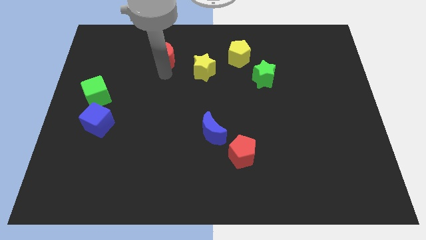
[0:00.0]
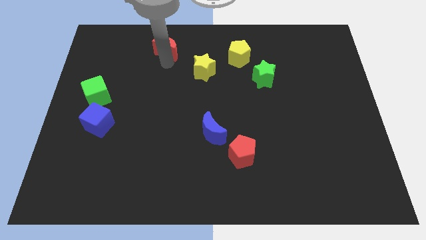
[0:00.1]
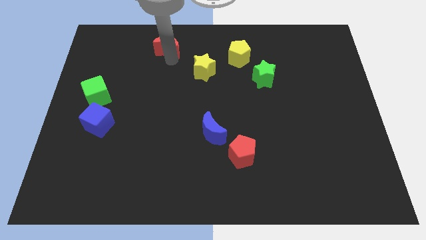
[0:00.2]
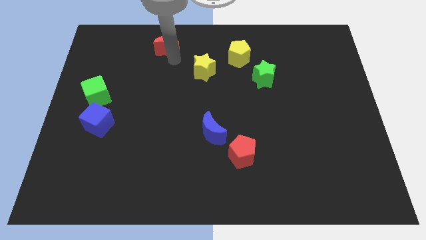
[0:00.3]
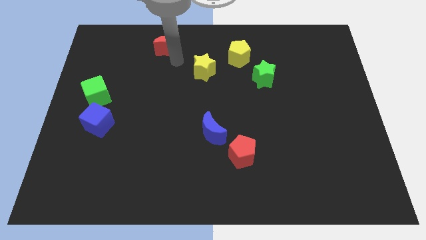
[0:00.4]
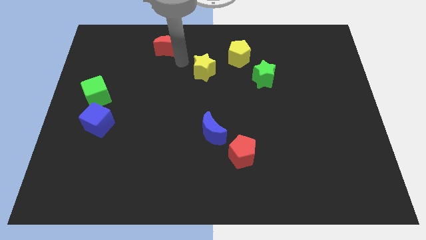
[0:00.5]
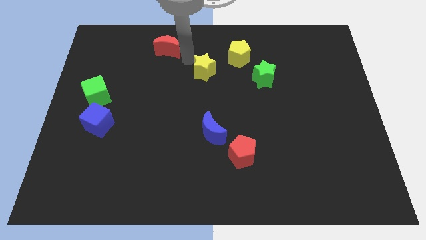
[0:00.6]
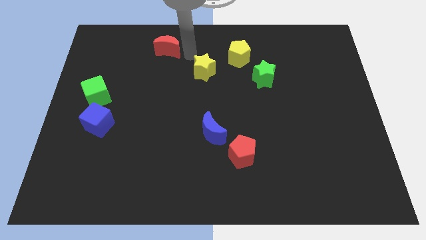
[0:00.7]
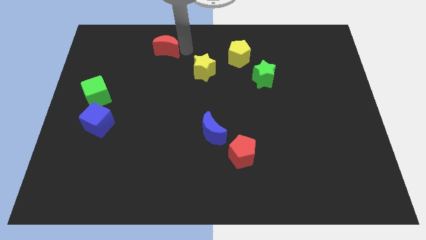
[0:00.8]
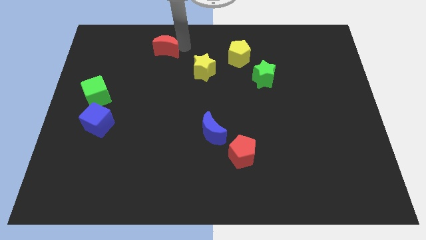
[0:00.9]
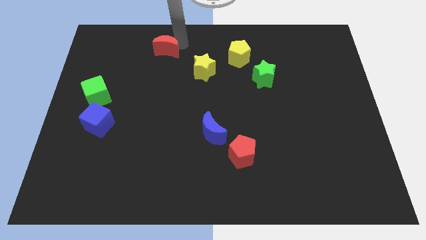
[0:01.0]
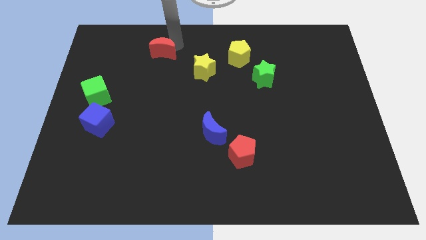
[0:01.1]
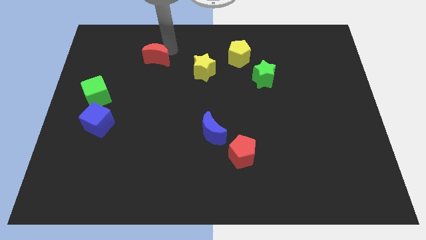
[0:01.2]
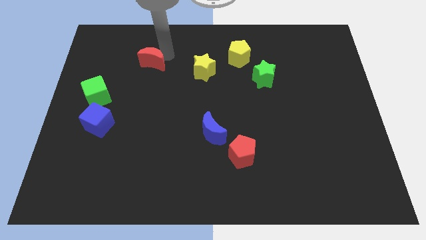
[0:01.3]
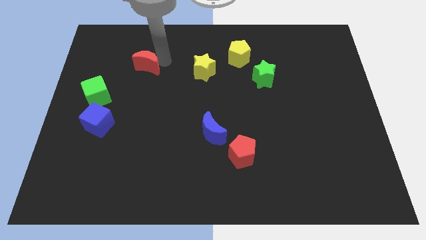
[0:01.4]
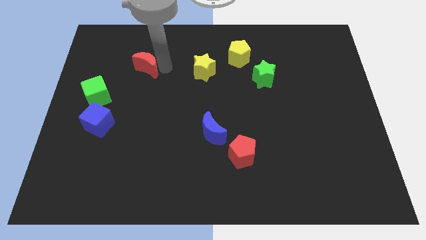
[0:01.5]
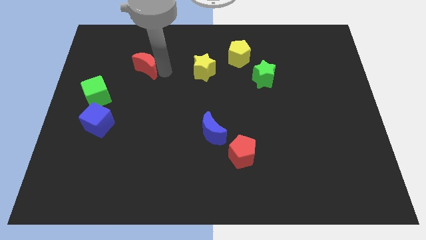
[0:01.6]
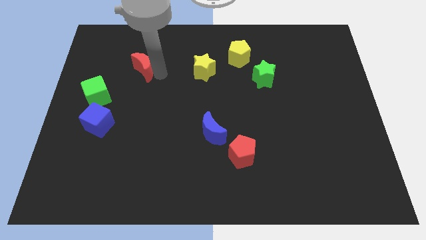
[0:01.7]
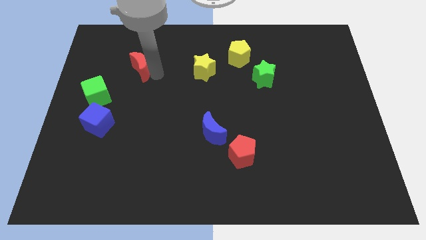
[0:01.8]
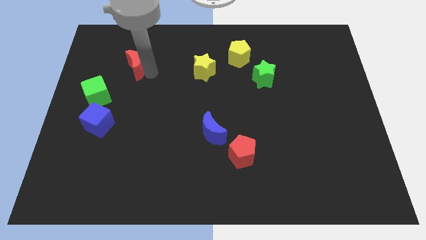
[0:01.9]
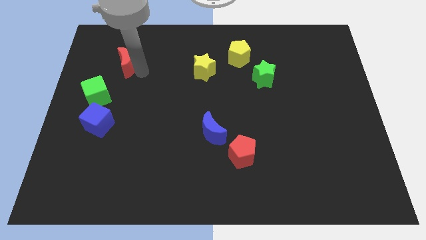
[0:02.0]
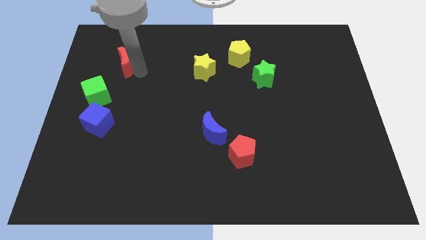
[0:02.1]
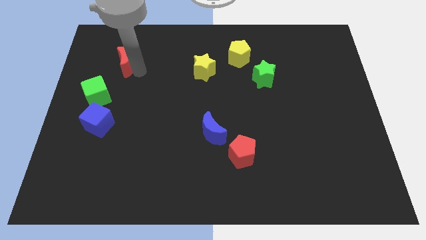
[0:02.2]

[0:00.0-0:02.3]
push the red moon slightly to the left side

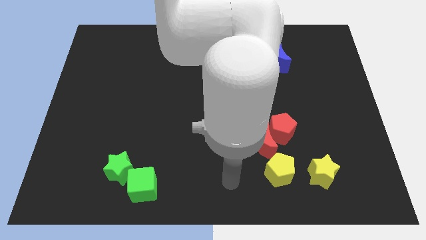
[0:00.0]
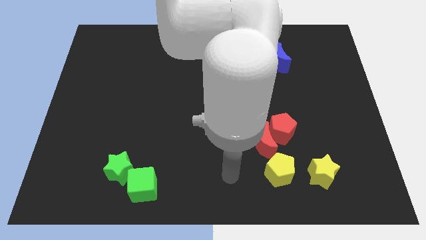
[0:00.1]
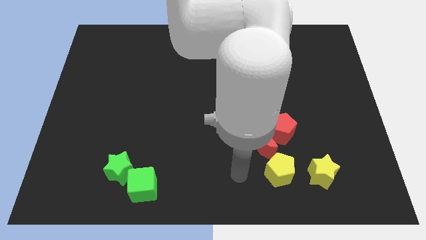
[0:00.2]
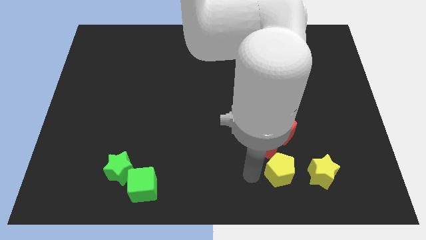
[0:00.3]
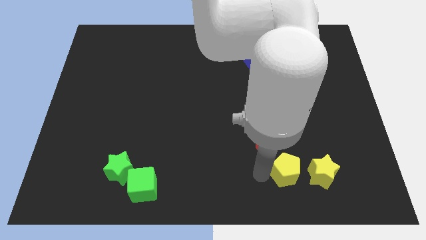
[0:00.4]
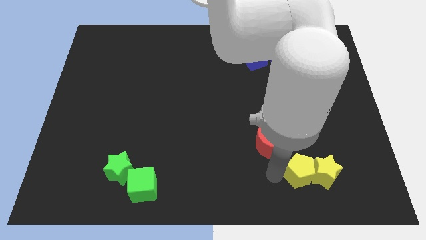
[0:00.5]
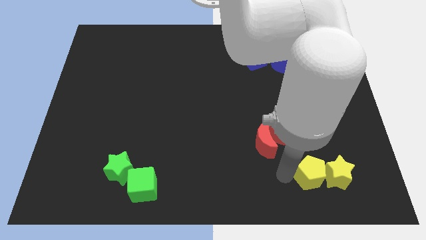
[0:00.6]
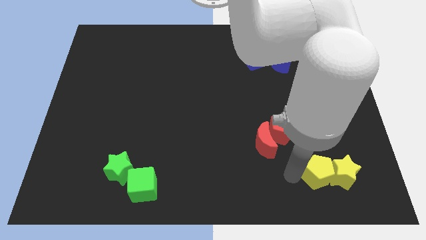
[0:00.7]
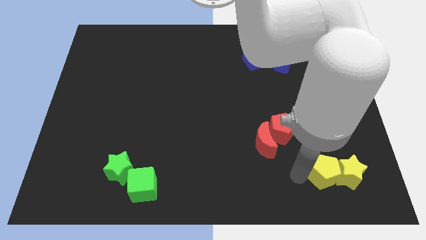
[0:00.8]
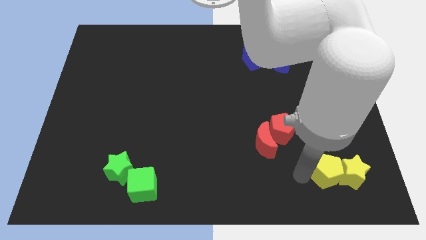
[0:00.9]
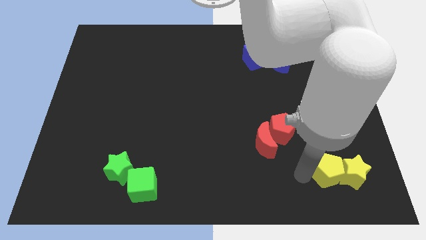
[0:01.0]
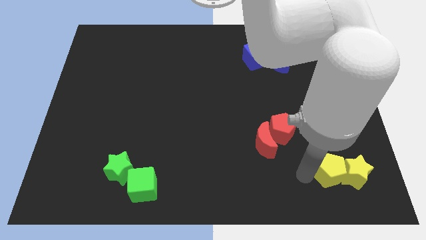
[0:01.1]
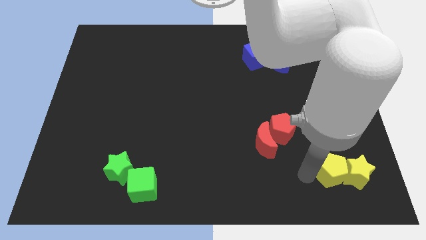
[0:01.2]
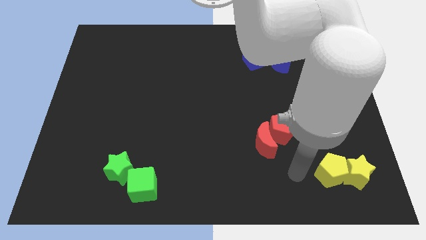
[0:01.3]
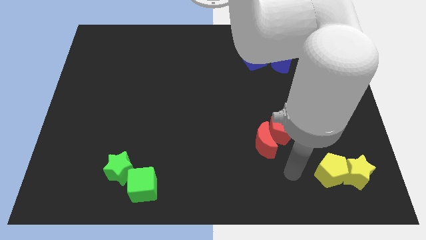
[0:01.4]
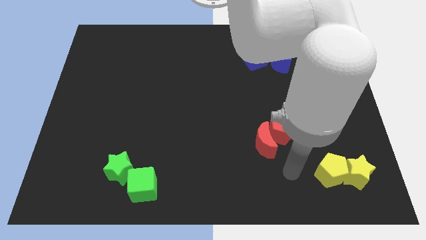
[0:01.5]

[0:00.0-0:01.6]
slide the yellow blocks to the right

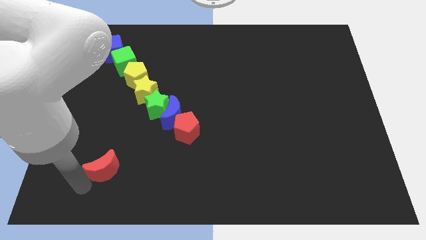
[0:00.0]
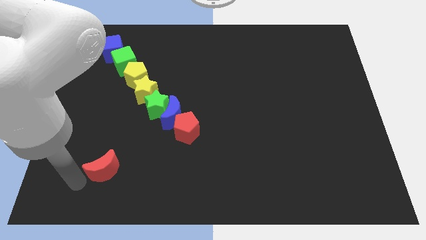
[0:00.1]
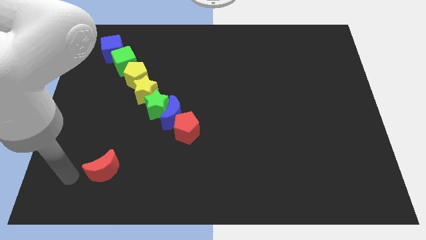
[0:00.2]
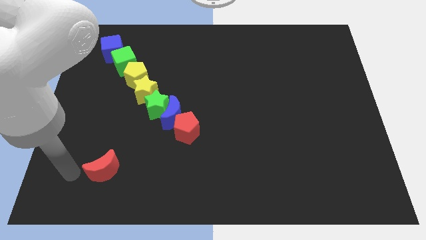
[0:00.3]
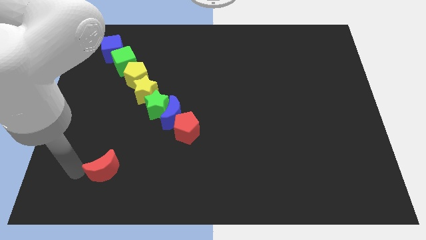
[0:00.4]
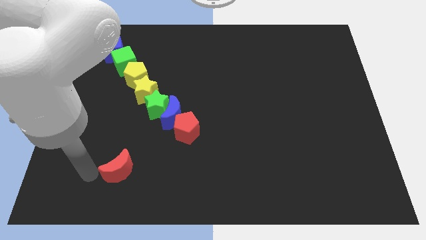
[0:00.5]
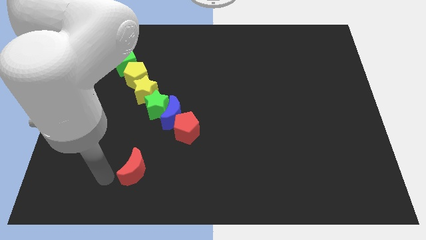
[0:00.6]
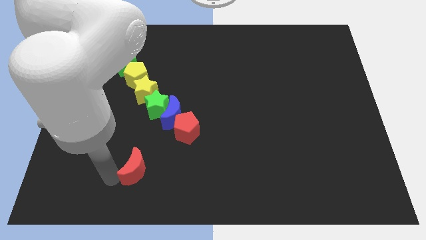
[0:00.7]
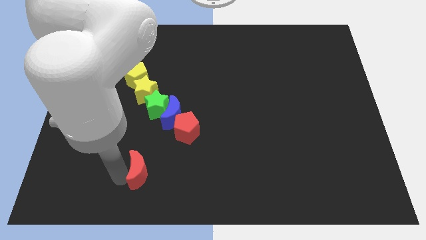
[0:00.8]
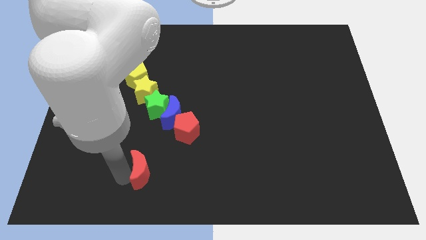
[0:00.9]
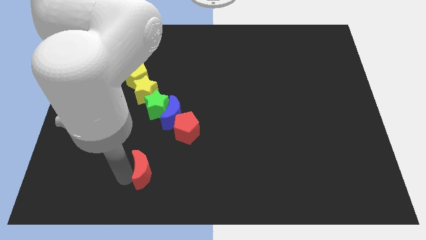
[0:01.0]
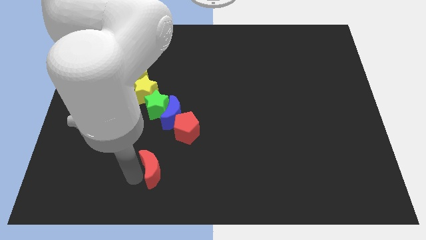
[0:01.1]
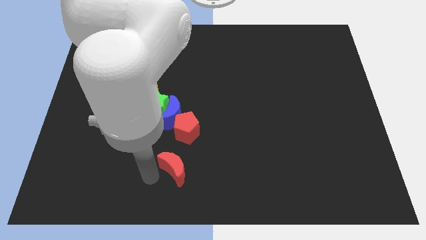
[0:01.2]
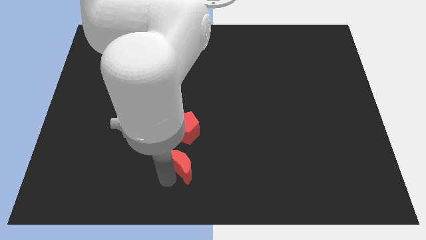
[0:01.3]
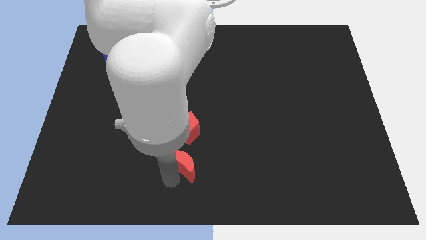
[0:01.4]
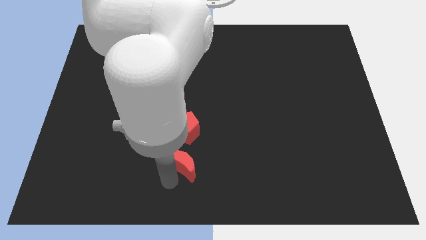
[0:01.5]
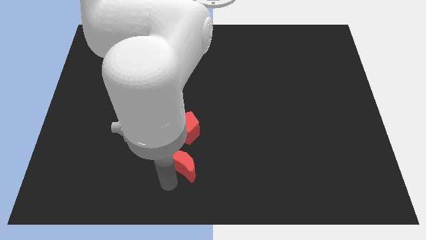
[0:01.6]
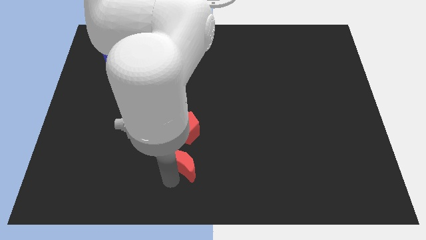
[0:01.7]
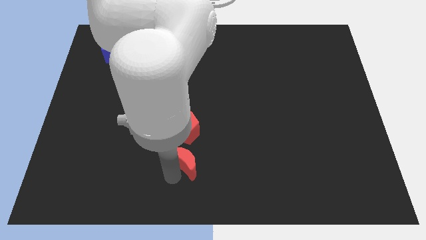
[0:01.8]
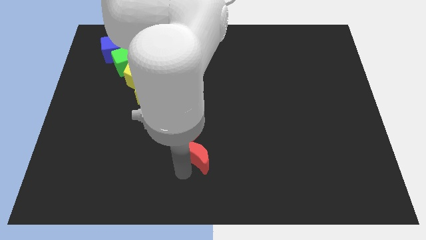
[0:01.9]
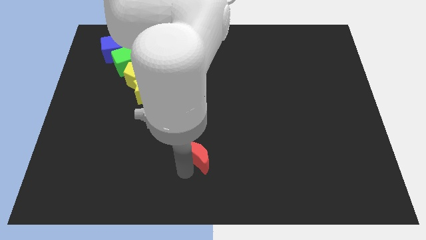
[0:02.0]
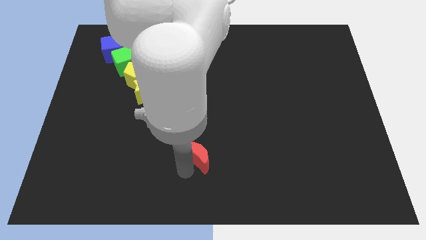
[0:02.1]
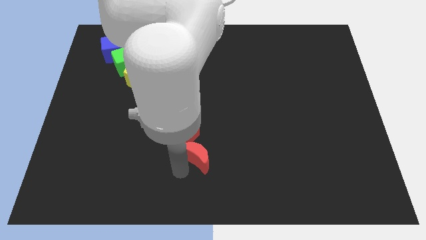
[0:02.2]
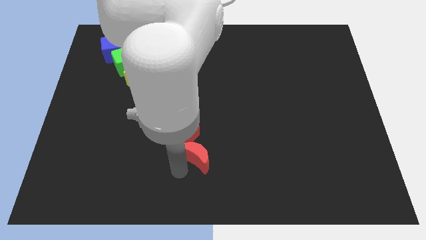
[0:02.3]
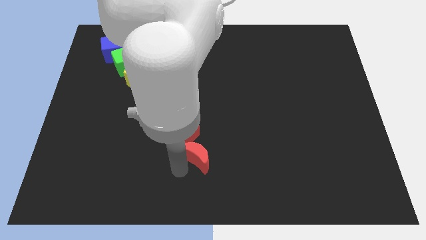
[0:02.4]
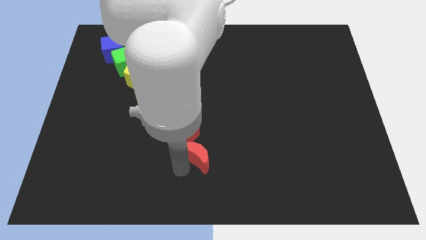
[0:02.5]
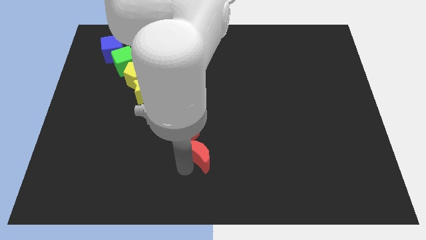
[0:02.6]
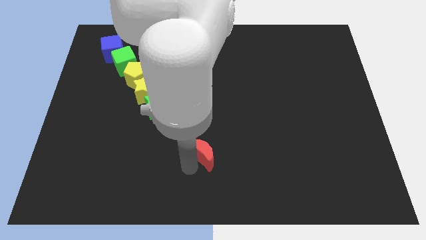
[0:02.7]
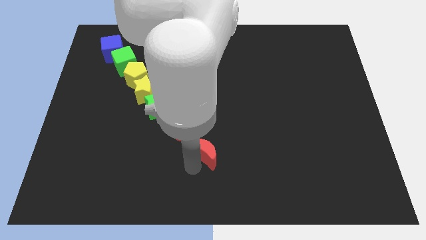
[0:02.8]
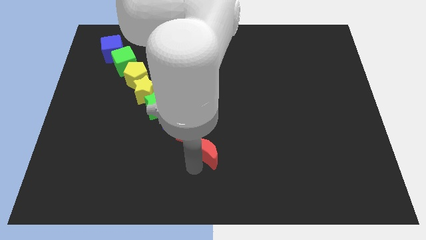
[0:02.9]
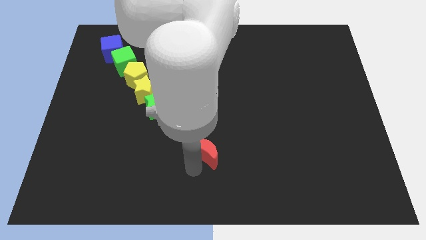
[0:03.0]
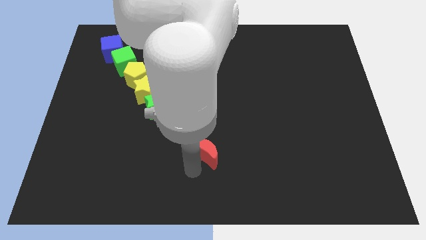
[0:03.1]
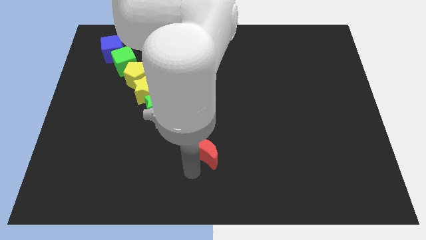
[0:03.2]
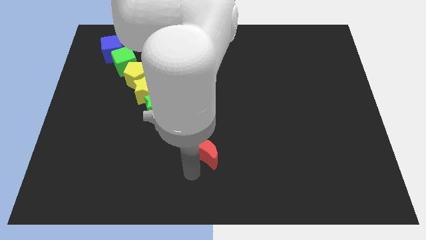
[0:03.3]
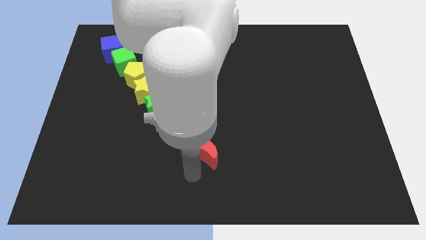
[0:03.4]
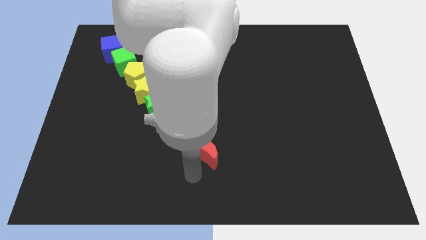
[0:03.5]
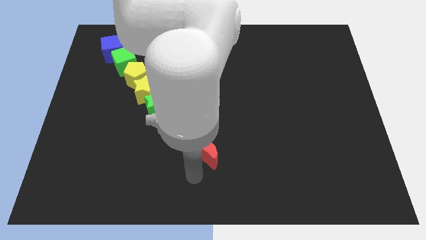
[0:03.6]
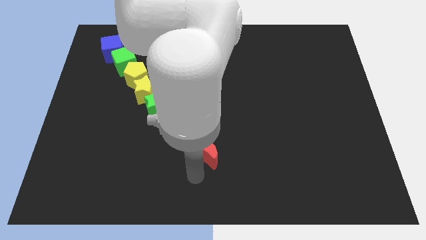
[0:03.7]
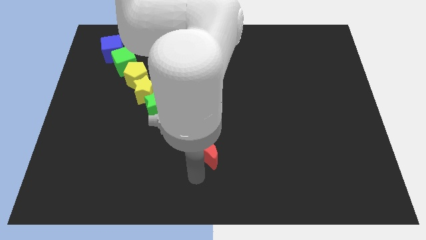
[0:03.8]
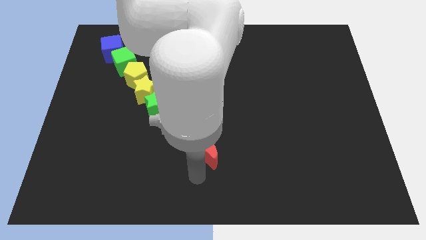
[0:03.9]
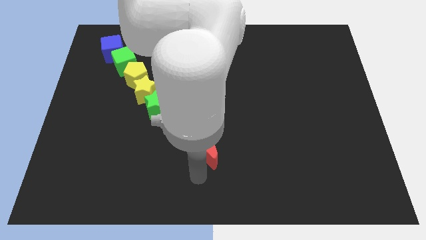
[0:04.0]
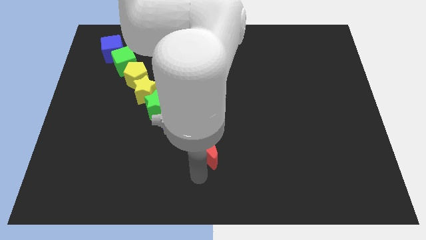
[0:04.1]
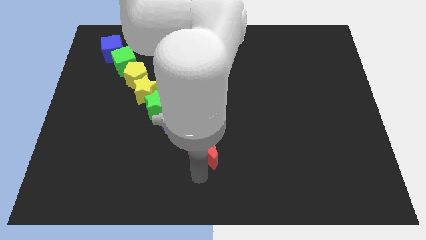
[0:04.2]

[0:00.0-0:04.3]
push the red crescent bottom of the red pentagon

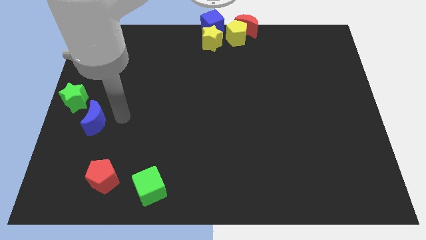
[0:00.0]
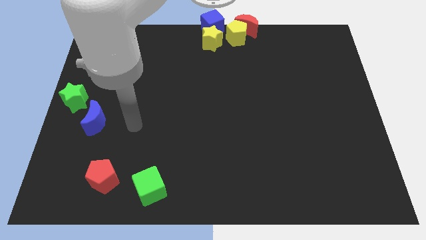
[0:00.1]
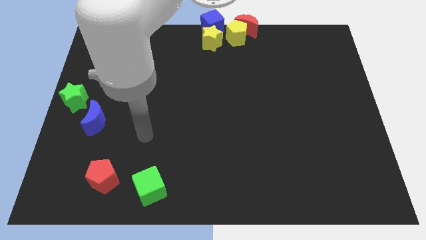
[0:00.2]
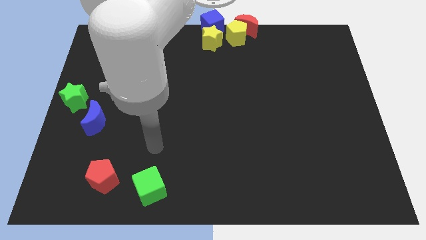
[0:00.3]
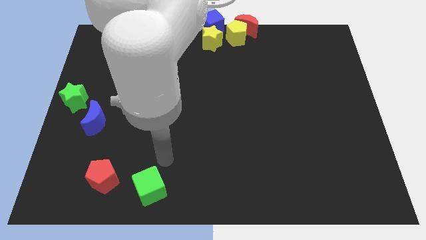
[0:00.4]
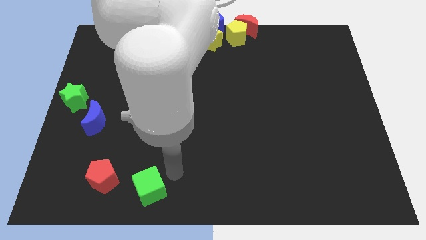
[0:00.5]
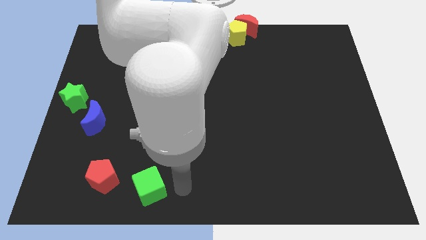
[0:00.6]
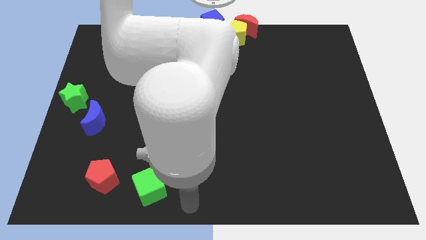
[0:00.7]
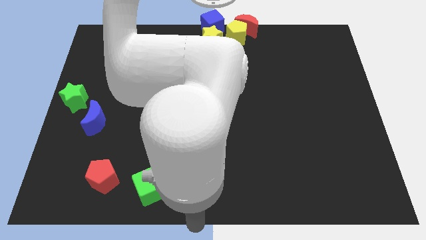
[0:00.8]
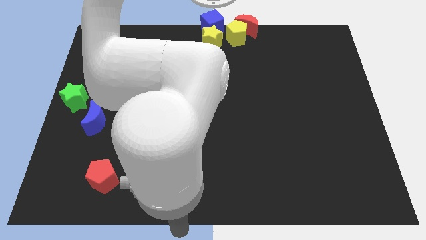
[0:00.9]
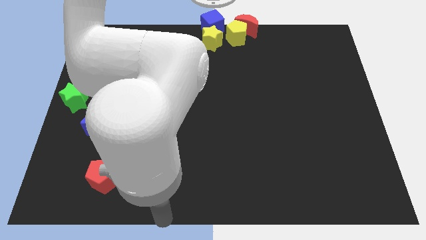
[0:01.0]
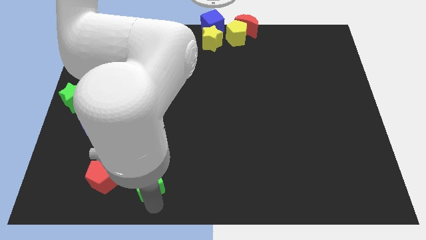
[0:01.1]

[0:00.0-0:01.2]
move your arm towards green star
